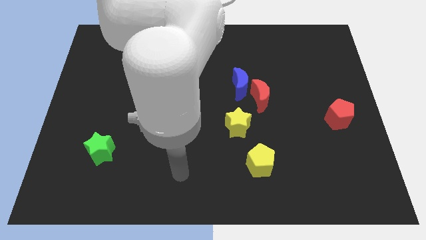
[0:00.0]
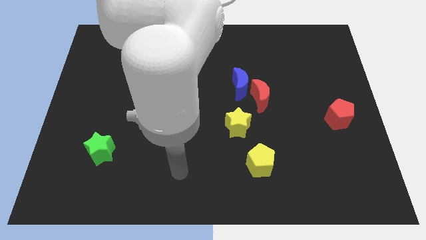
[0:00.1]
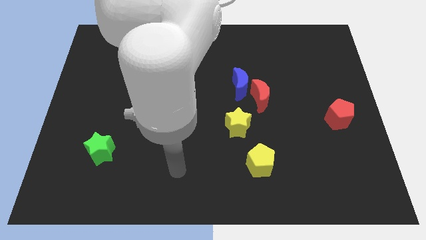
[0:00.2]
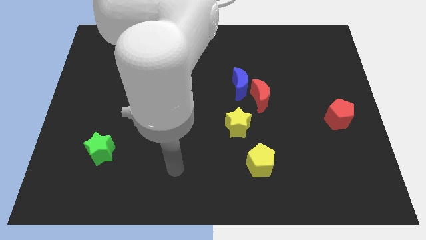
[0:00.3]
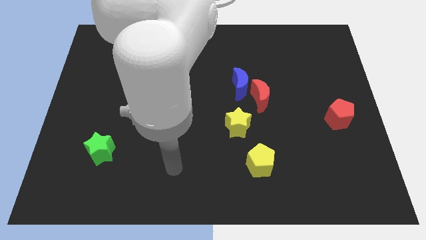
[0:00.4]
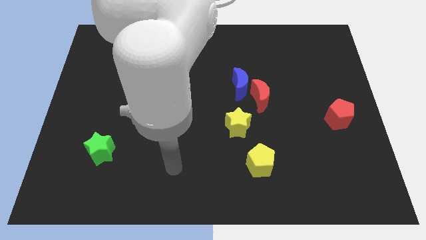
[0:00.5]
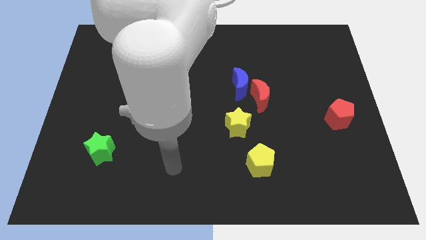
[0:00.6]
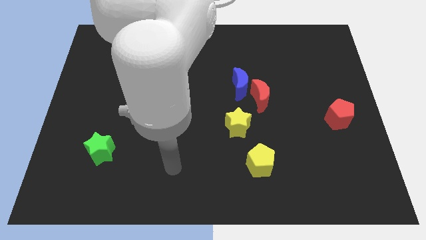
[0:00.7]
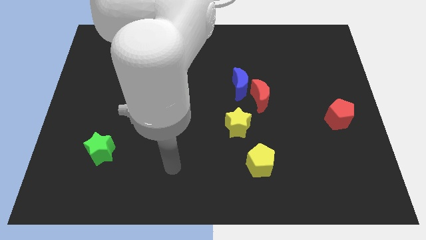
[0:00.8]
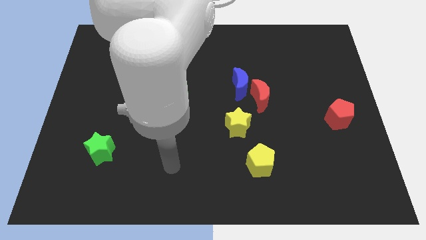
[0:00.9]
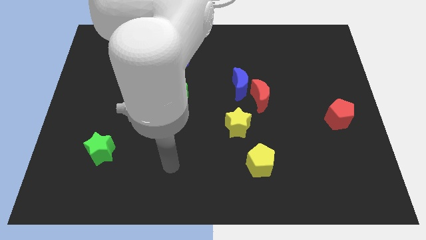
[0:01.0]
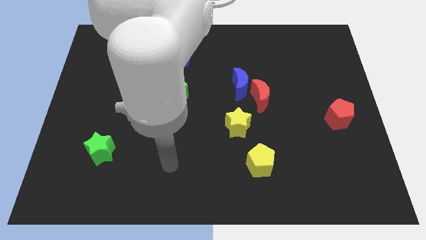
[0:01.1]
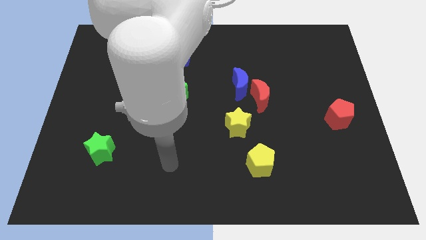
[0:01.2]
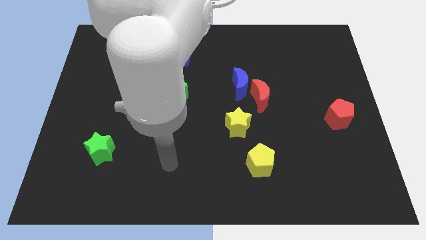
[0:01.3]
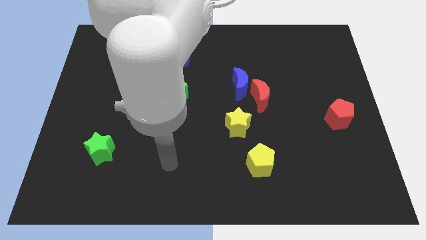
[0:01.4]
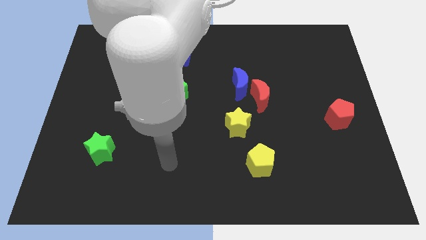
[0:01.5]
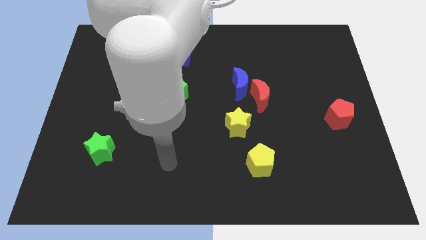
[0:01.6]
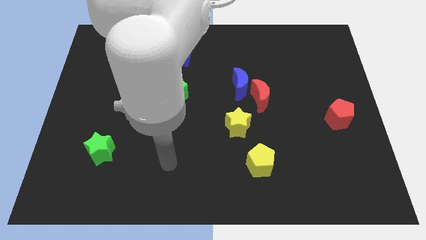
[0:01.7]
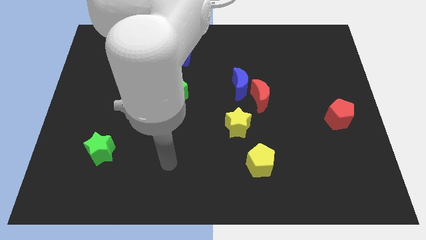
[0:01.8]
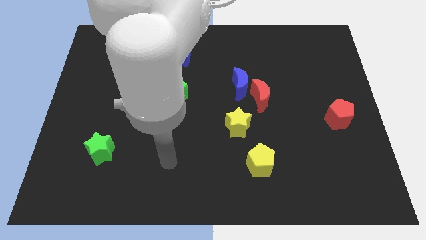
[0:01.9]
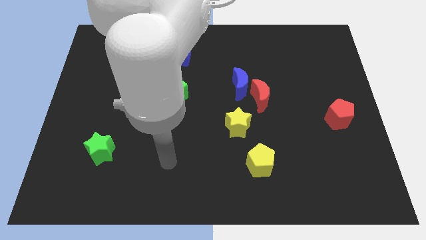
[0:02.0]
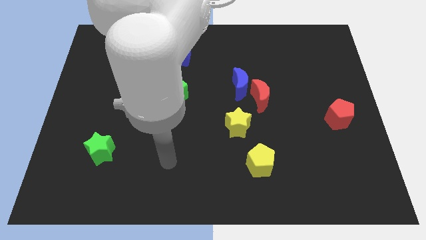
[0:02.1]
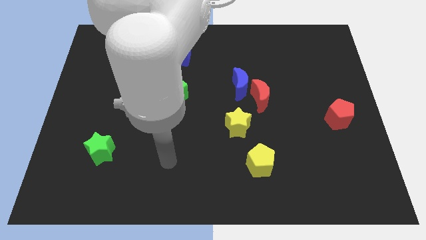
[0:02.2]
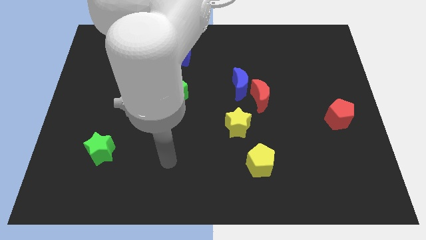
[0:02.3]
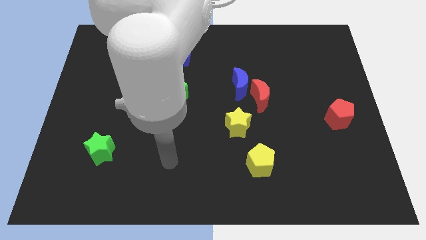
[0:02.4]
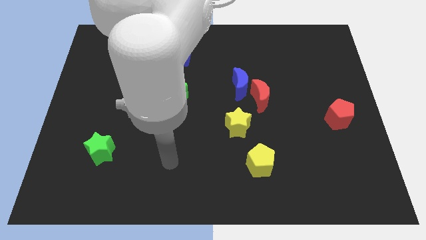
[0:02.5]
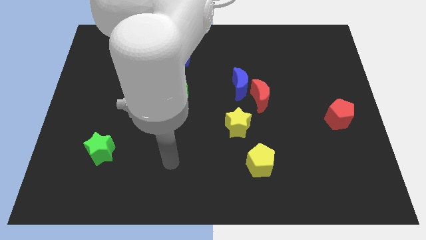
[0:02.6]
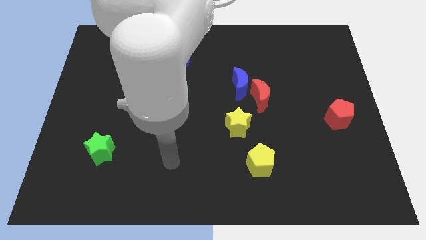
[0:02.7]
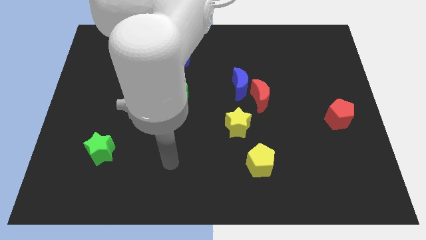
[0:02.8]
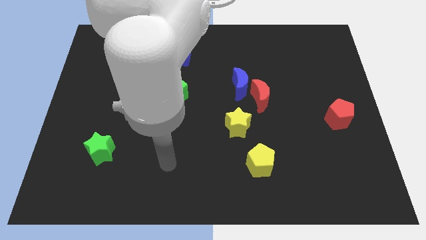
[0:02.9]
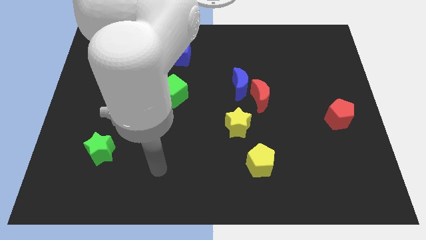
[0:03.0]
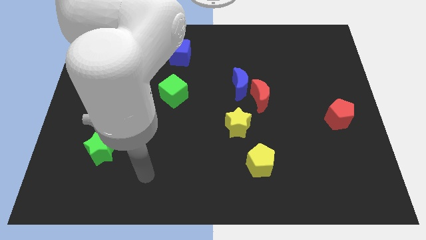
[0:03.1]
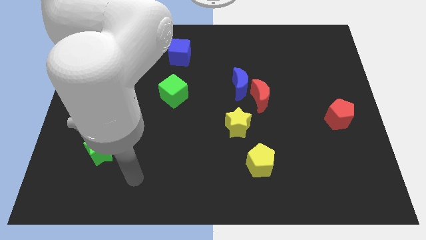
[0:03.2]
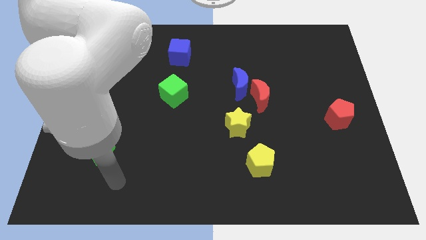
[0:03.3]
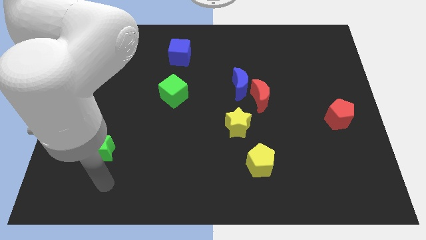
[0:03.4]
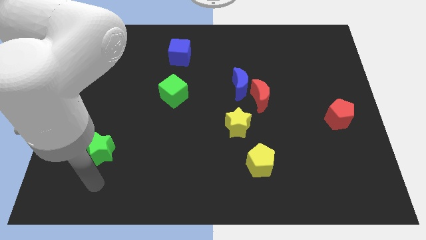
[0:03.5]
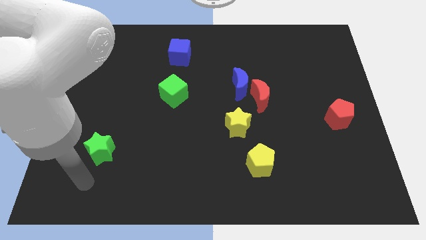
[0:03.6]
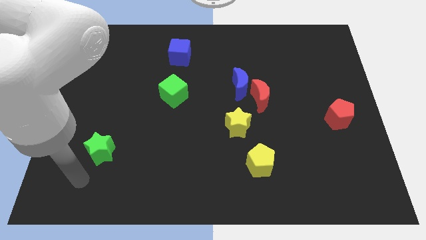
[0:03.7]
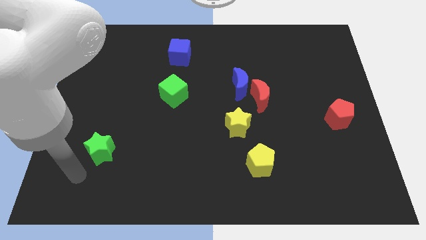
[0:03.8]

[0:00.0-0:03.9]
place your arm below green star

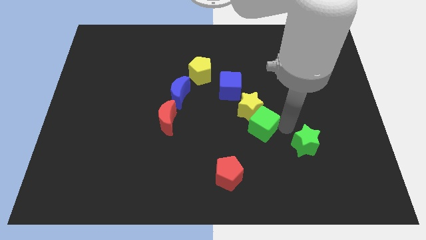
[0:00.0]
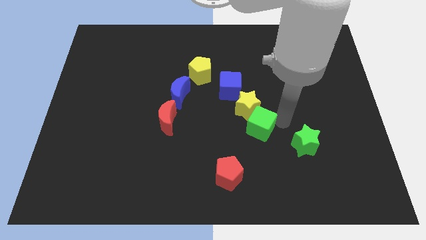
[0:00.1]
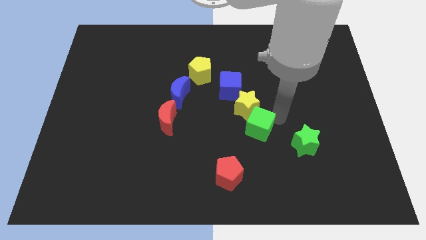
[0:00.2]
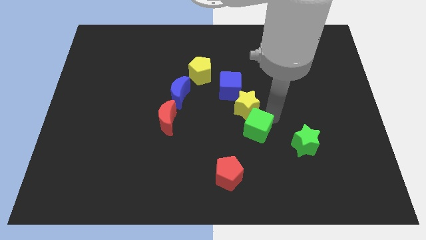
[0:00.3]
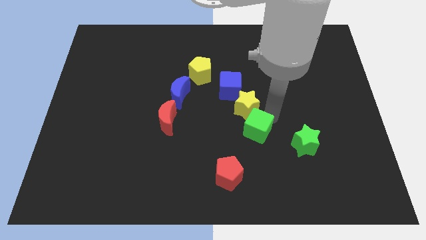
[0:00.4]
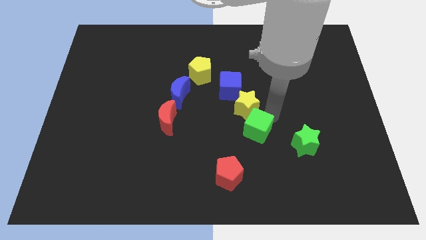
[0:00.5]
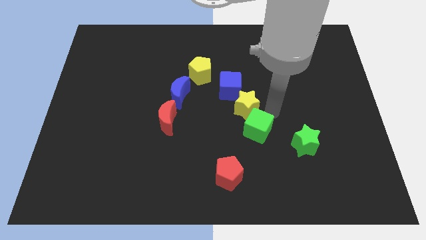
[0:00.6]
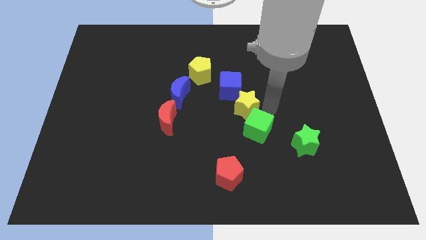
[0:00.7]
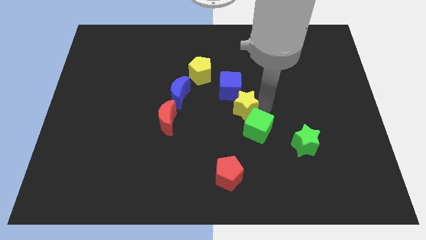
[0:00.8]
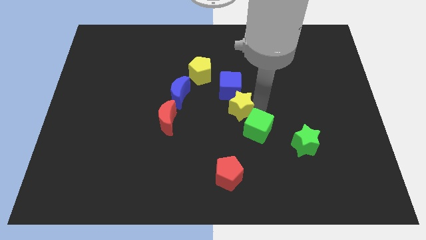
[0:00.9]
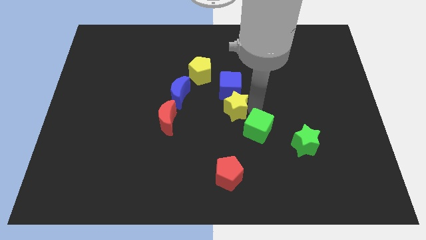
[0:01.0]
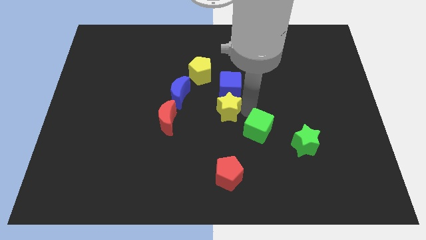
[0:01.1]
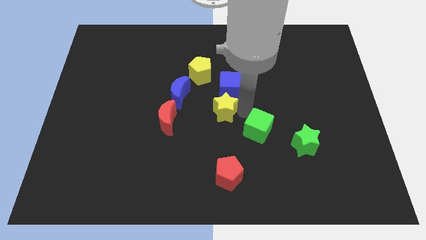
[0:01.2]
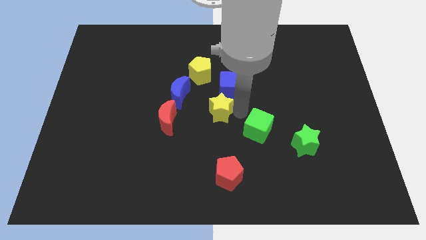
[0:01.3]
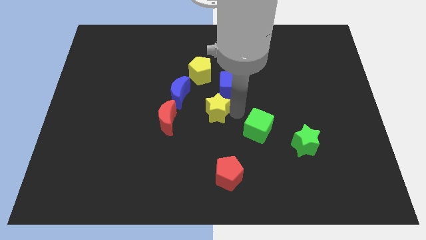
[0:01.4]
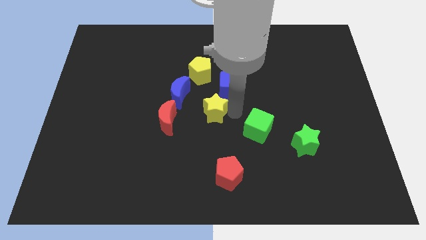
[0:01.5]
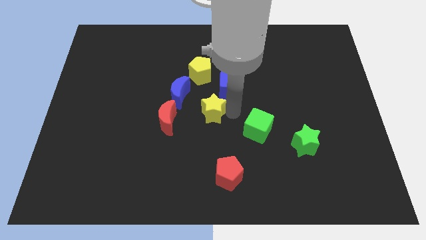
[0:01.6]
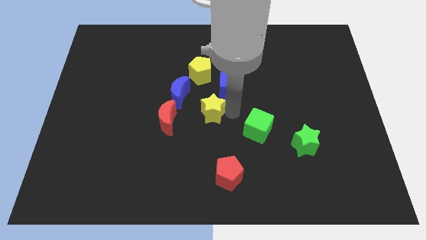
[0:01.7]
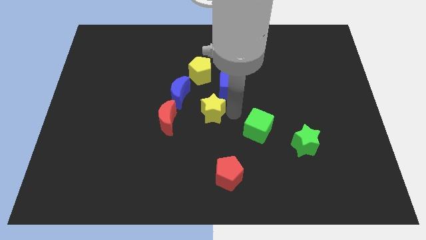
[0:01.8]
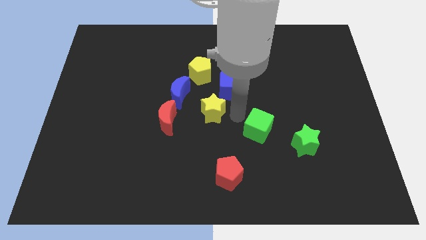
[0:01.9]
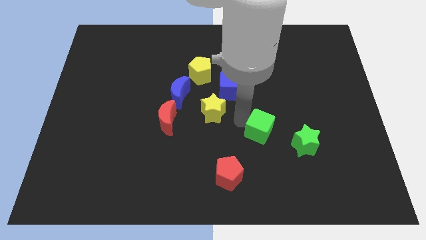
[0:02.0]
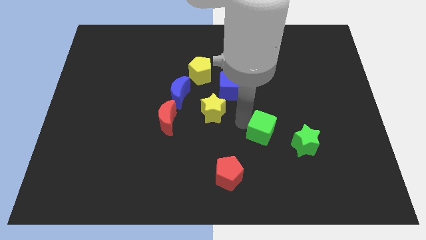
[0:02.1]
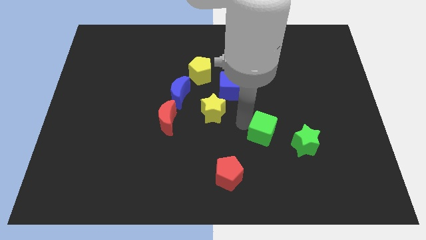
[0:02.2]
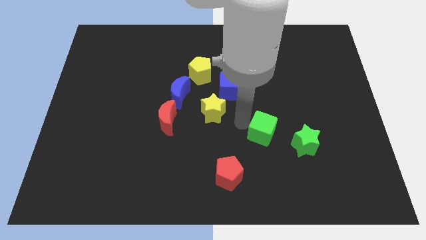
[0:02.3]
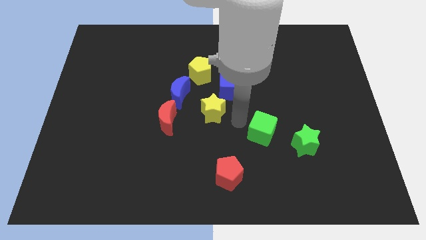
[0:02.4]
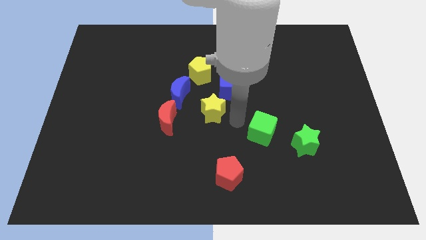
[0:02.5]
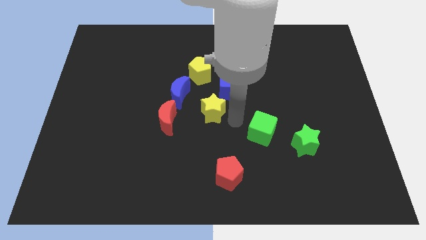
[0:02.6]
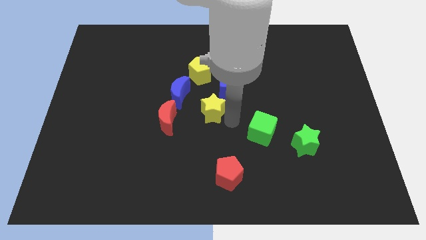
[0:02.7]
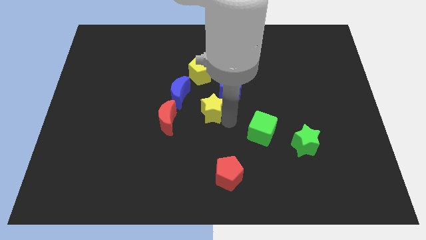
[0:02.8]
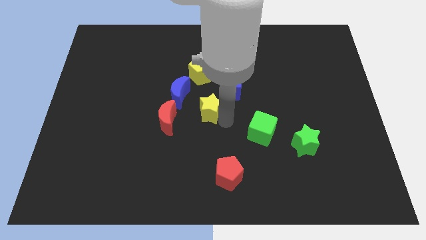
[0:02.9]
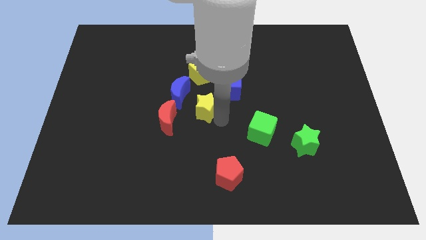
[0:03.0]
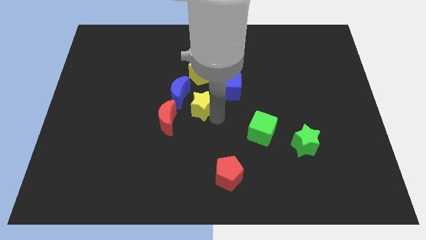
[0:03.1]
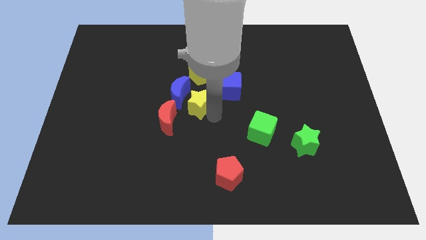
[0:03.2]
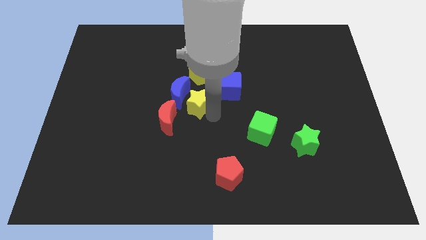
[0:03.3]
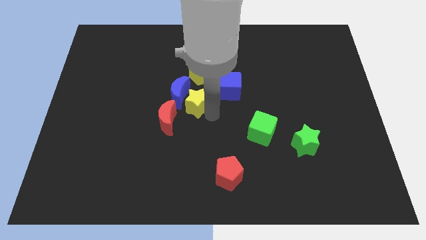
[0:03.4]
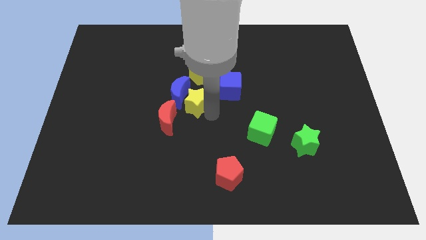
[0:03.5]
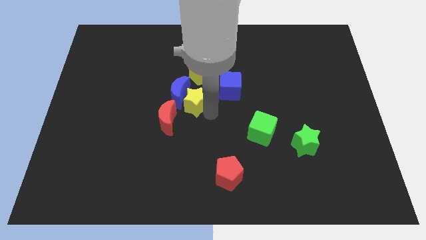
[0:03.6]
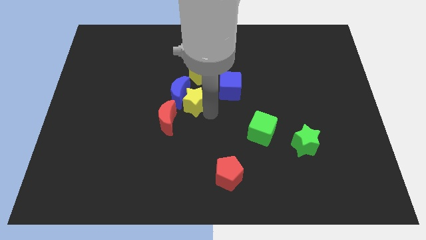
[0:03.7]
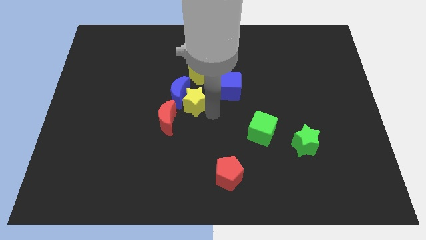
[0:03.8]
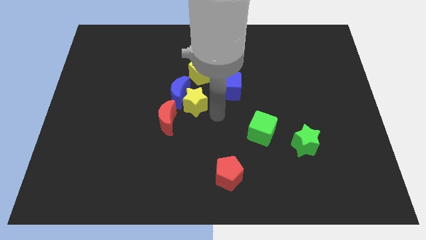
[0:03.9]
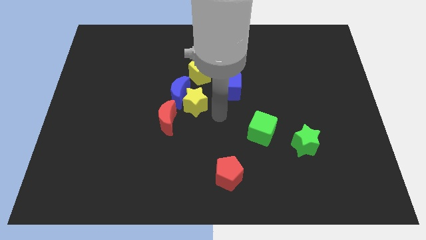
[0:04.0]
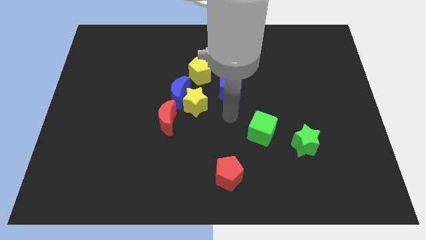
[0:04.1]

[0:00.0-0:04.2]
place the yellow star to the right of the blue crescent

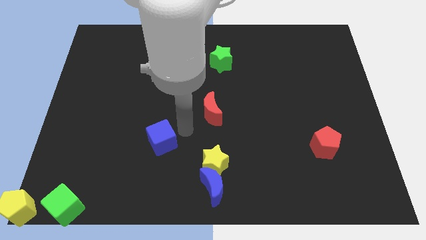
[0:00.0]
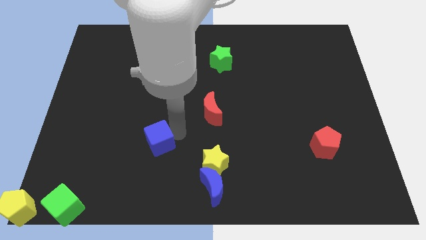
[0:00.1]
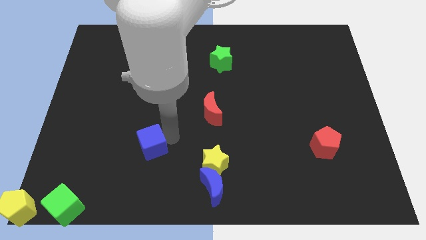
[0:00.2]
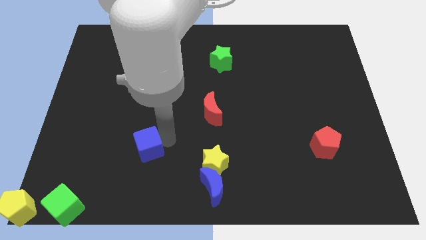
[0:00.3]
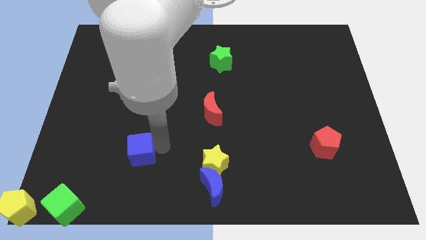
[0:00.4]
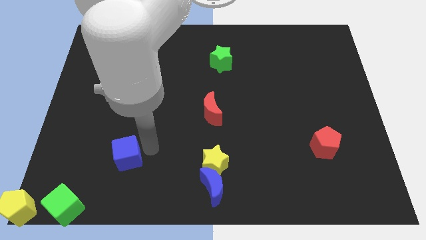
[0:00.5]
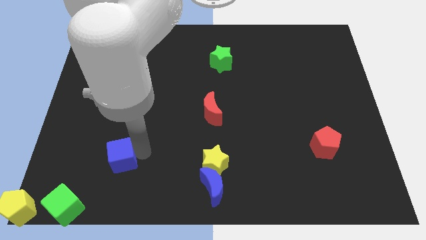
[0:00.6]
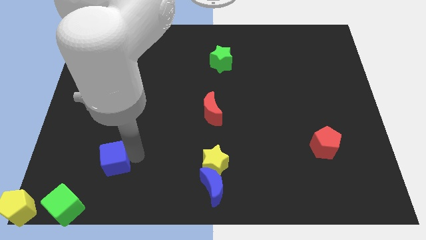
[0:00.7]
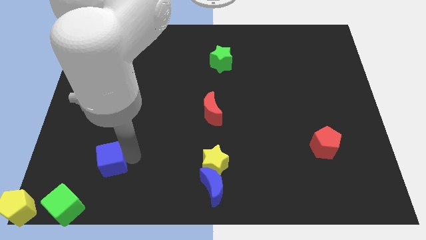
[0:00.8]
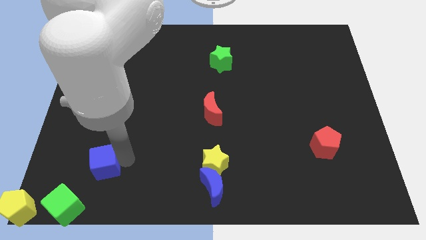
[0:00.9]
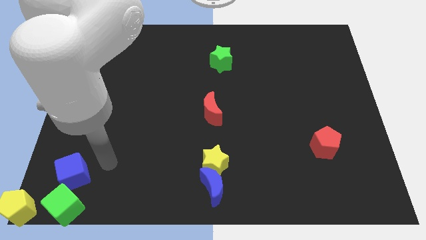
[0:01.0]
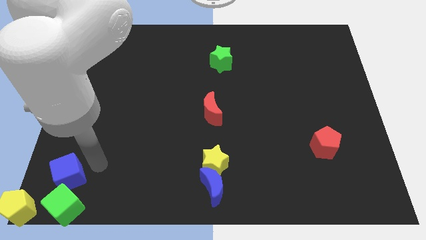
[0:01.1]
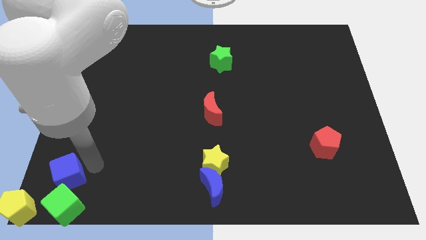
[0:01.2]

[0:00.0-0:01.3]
put blue cube above green cube
